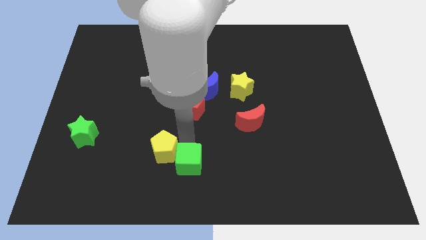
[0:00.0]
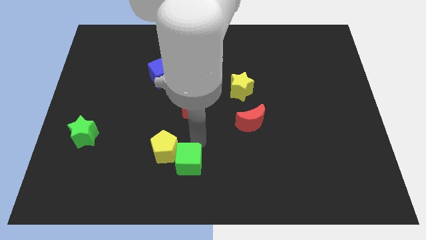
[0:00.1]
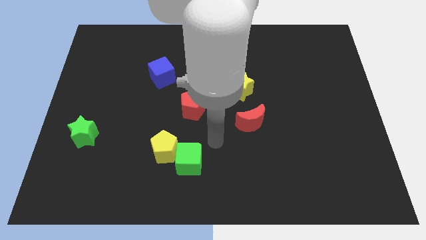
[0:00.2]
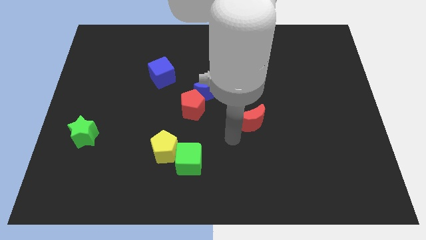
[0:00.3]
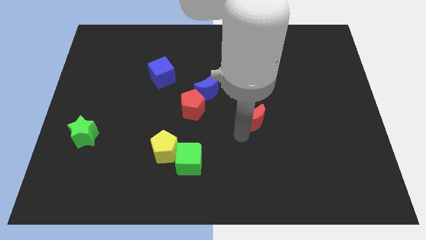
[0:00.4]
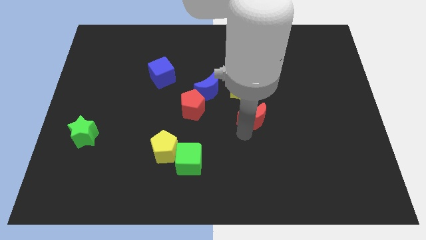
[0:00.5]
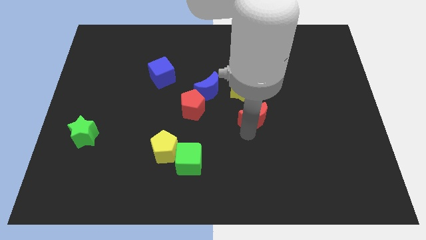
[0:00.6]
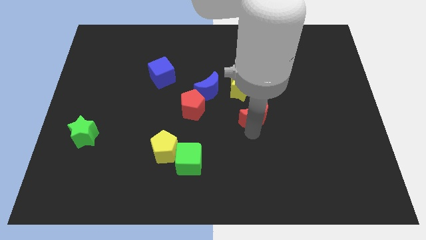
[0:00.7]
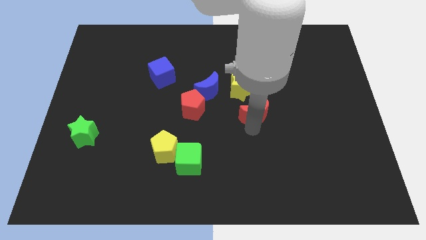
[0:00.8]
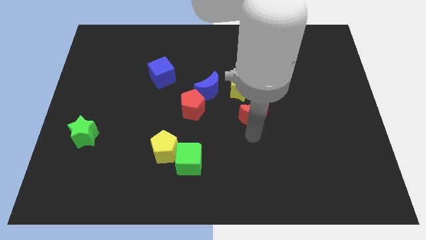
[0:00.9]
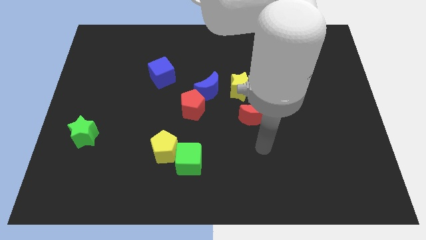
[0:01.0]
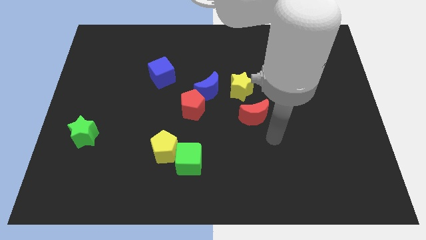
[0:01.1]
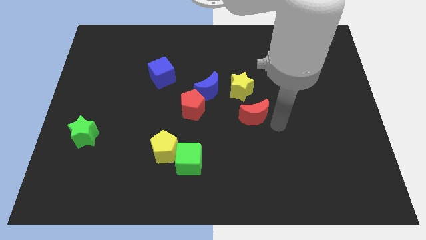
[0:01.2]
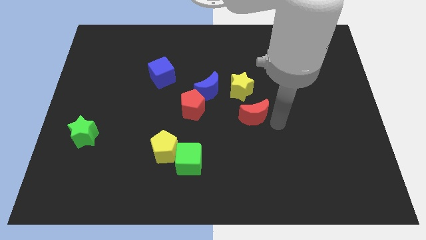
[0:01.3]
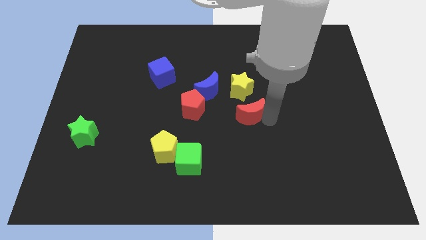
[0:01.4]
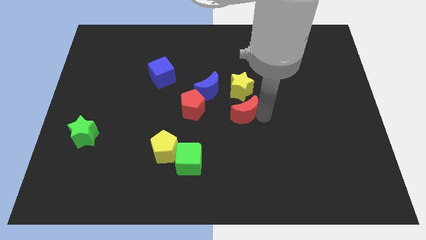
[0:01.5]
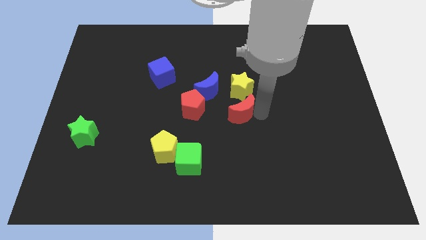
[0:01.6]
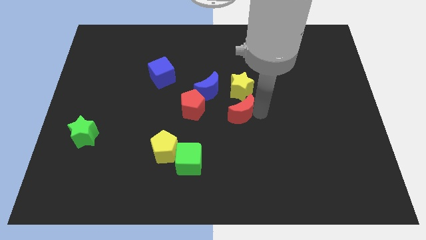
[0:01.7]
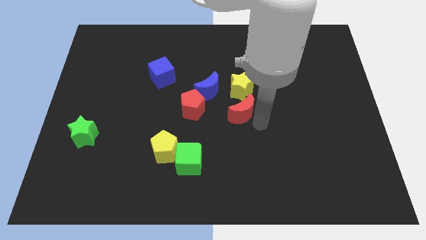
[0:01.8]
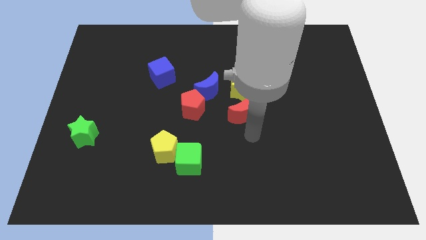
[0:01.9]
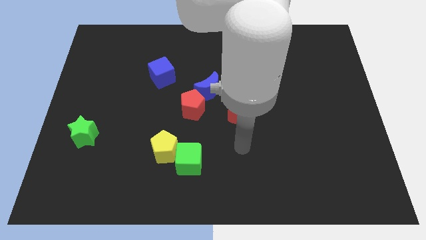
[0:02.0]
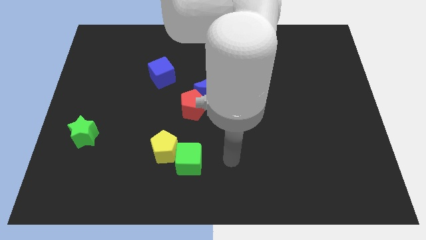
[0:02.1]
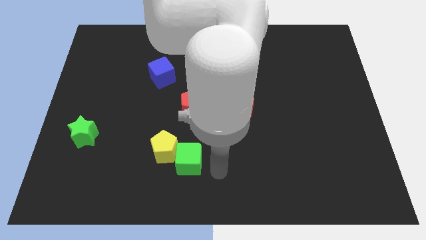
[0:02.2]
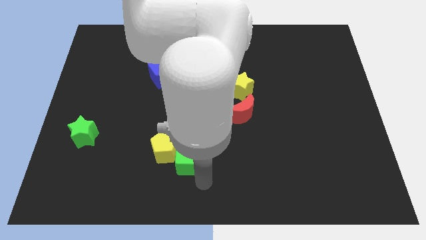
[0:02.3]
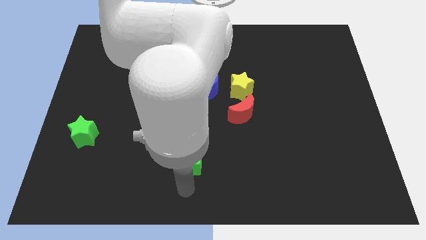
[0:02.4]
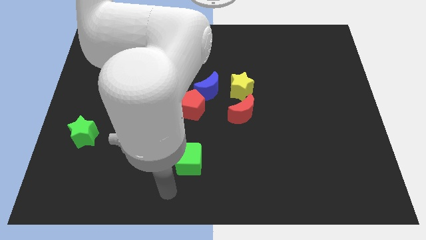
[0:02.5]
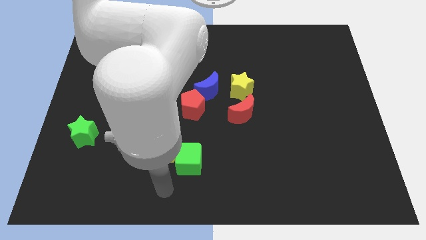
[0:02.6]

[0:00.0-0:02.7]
place the red moon parallel to red pentagon

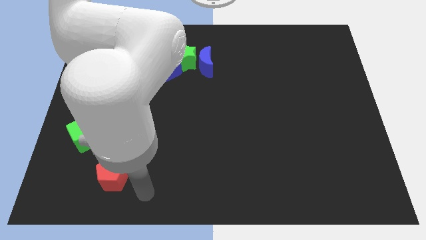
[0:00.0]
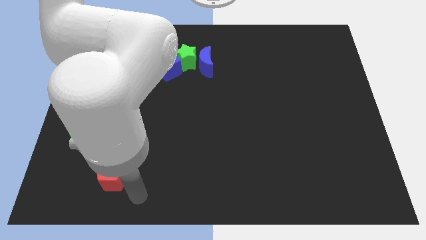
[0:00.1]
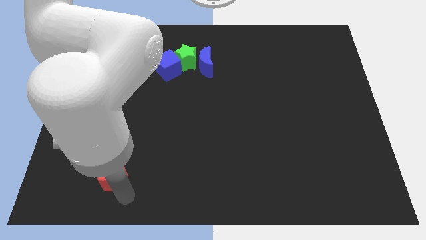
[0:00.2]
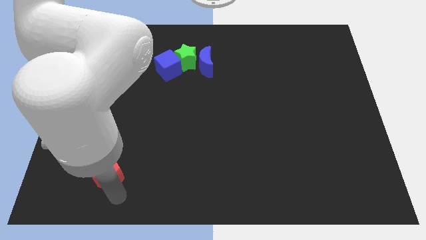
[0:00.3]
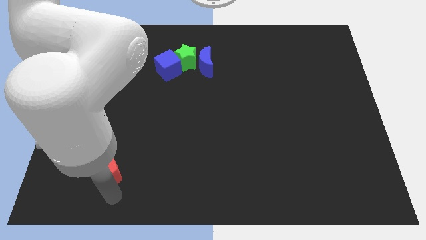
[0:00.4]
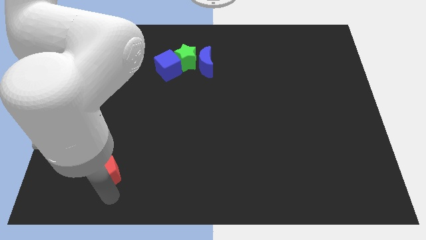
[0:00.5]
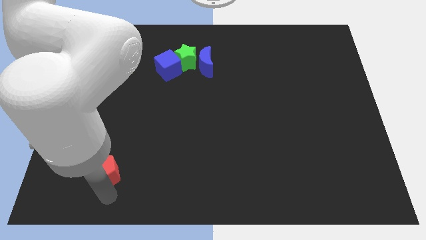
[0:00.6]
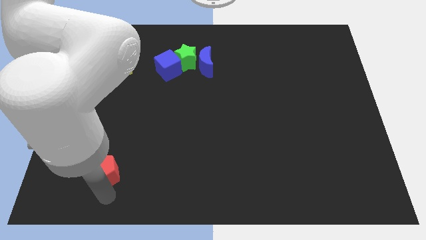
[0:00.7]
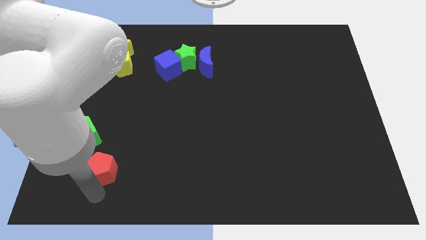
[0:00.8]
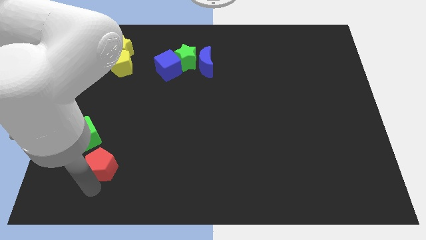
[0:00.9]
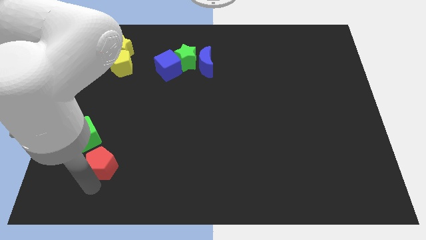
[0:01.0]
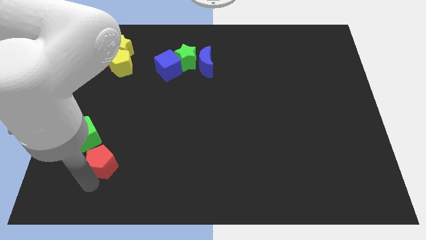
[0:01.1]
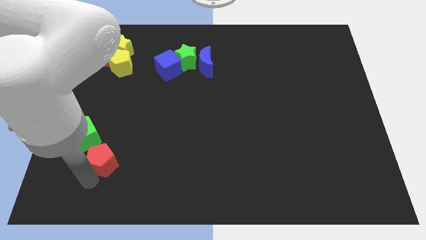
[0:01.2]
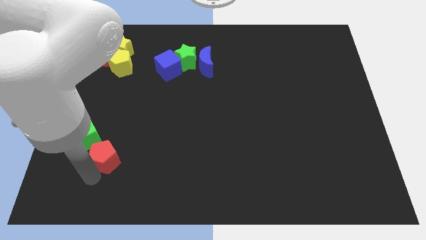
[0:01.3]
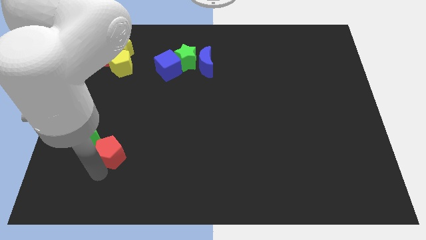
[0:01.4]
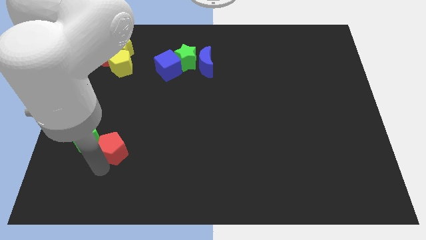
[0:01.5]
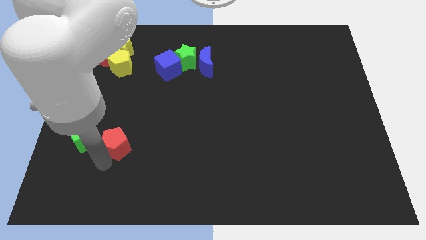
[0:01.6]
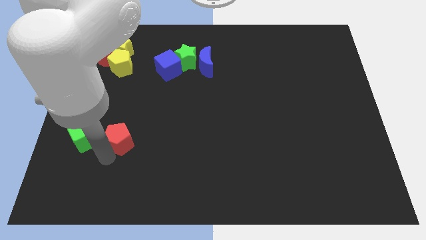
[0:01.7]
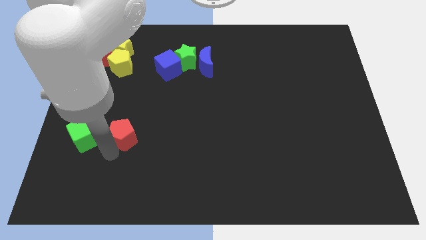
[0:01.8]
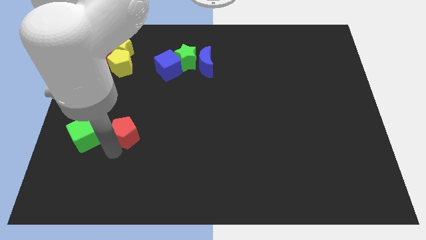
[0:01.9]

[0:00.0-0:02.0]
put the red pentagon to the right side of the green cube

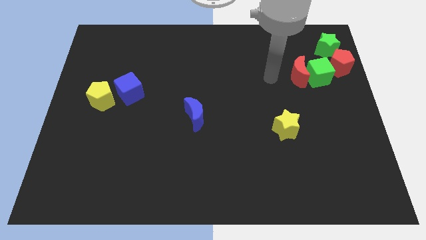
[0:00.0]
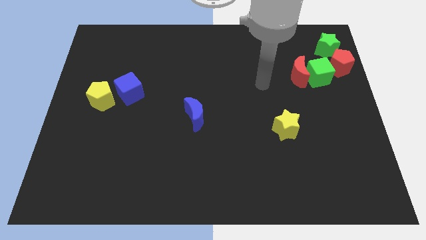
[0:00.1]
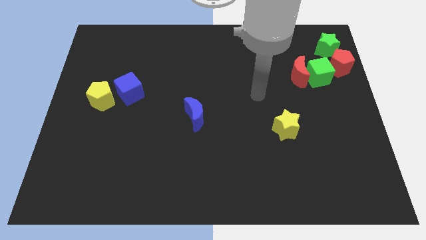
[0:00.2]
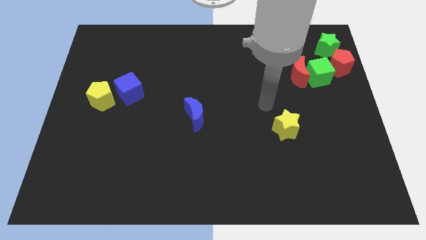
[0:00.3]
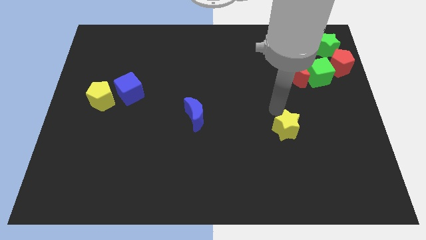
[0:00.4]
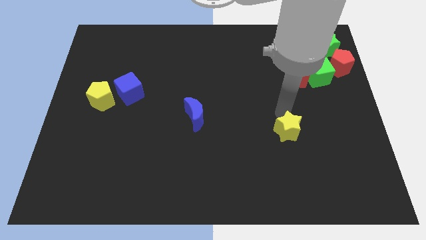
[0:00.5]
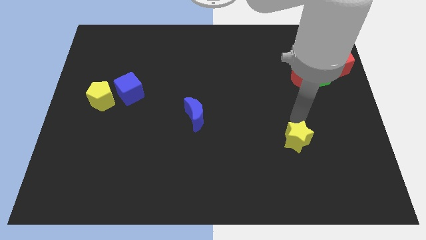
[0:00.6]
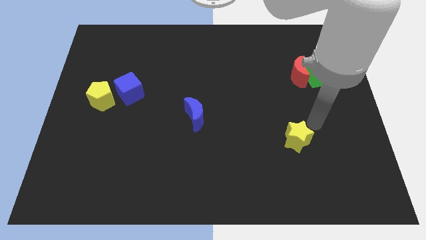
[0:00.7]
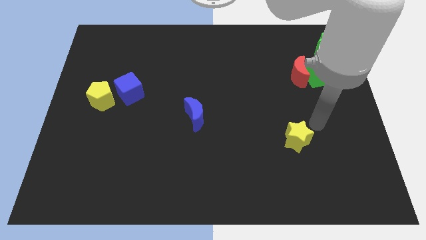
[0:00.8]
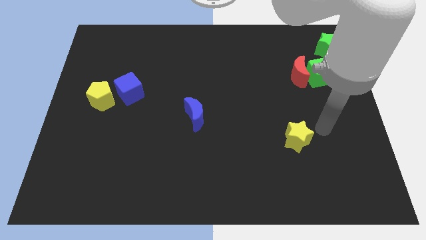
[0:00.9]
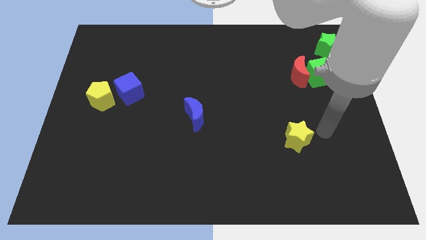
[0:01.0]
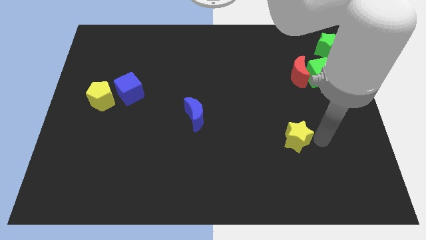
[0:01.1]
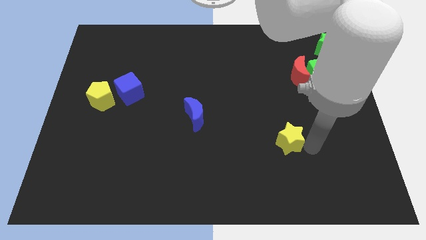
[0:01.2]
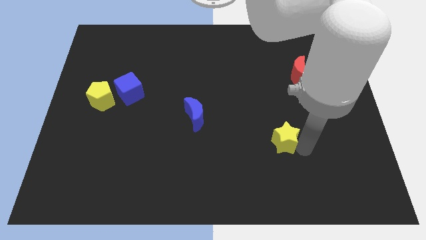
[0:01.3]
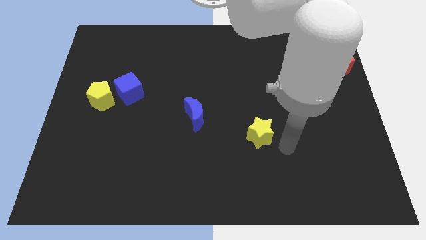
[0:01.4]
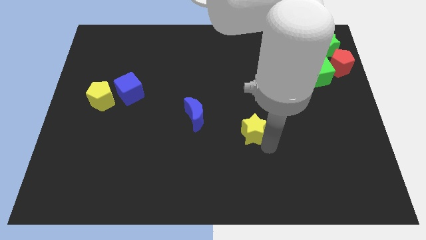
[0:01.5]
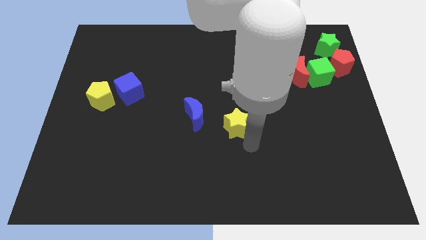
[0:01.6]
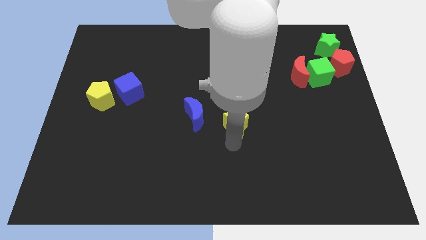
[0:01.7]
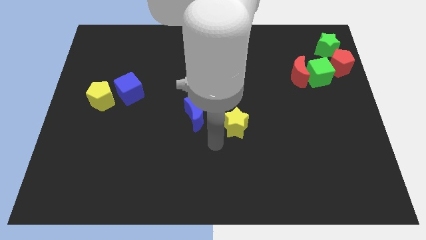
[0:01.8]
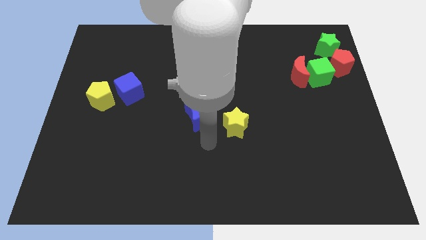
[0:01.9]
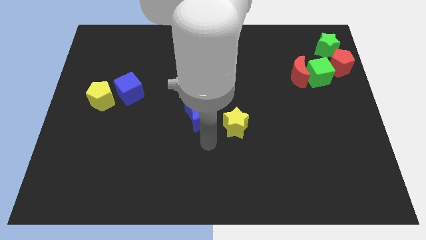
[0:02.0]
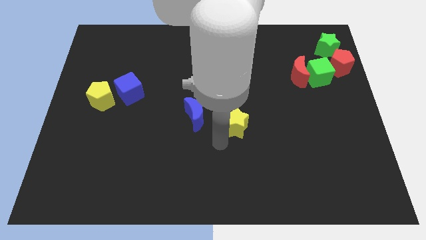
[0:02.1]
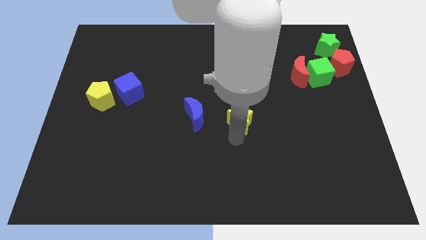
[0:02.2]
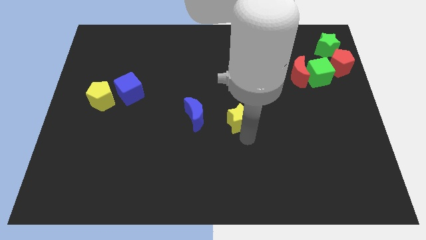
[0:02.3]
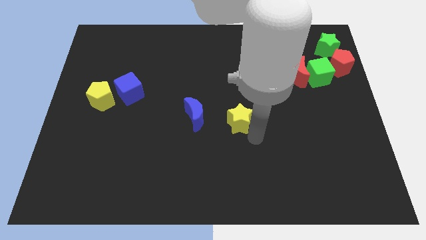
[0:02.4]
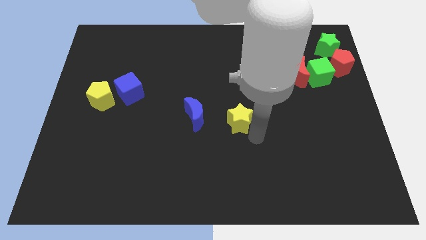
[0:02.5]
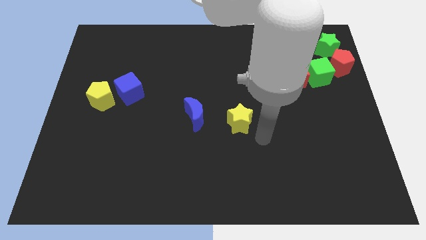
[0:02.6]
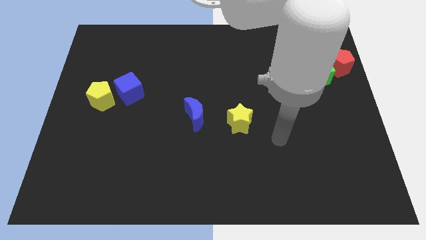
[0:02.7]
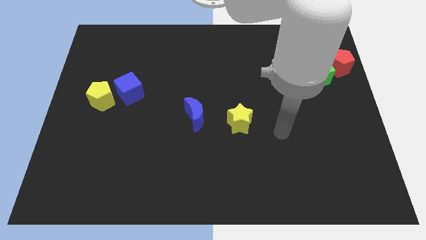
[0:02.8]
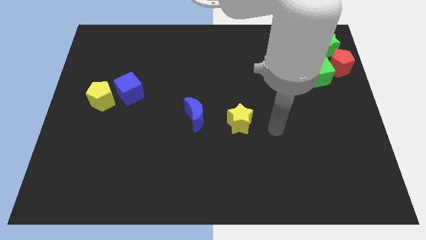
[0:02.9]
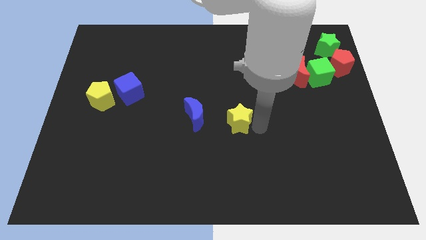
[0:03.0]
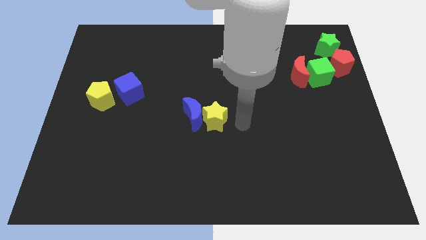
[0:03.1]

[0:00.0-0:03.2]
push the yellow star to the right side of the blue moon

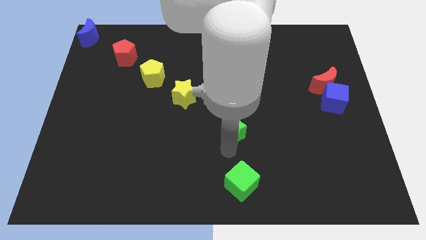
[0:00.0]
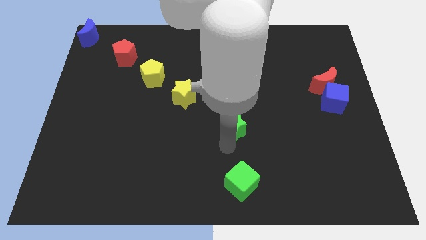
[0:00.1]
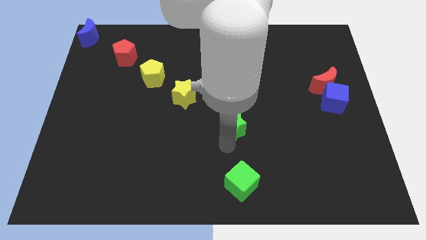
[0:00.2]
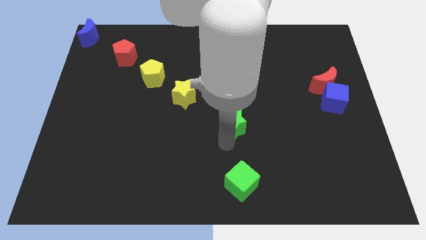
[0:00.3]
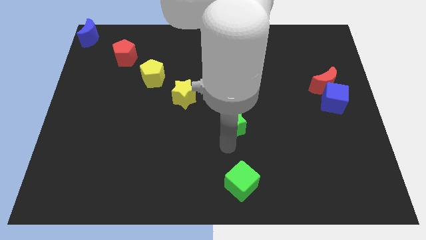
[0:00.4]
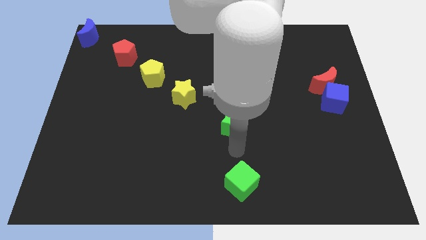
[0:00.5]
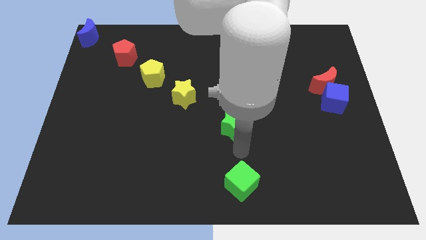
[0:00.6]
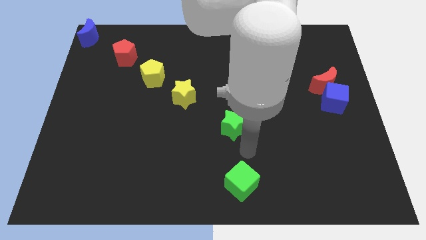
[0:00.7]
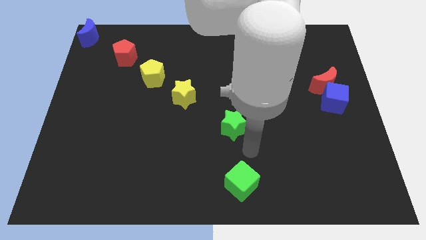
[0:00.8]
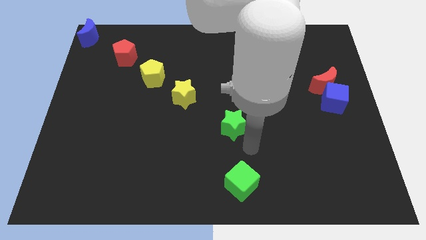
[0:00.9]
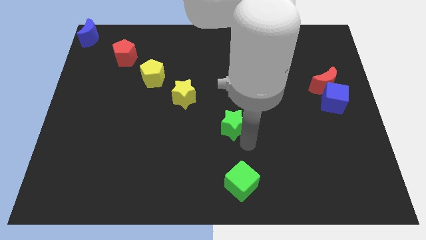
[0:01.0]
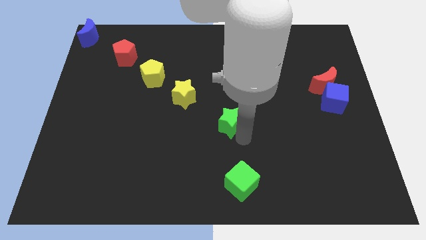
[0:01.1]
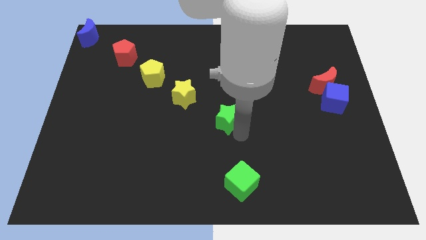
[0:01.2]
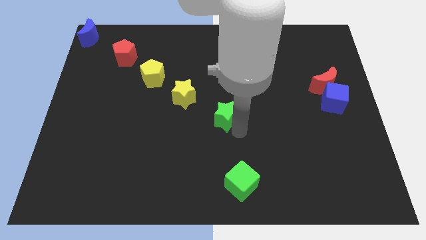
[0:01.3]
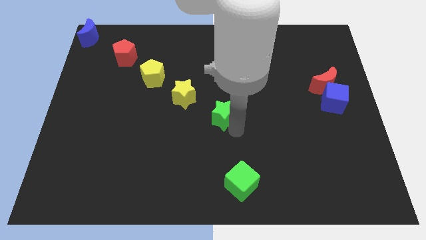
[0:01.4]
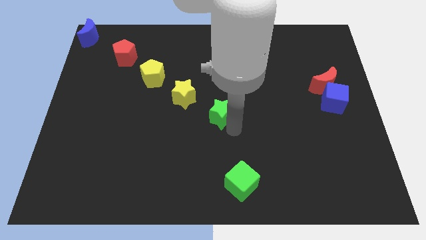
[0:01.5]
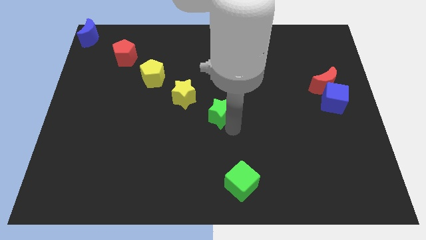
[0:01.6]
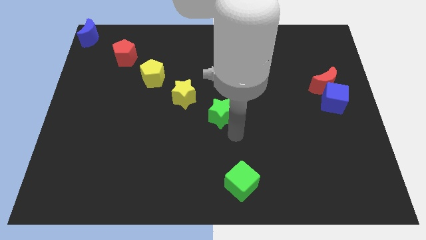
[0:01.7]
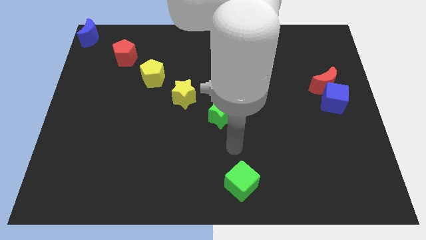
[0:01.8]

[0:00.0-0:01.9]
move the green star parallel to the yellow star
